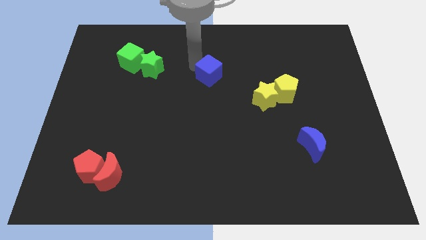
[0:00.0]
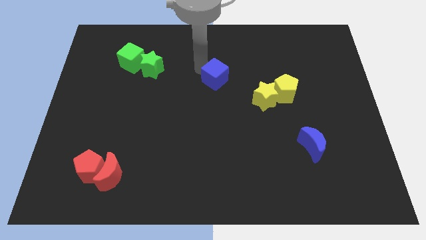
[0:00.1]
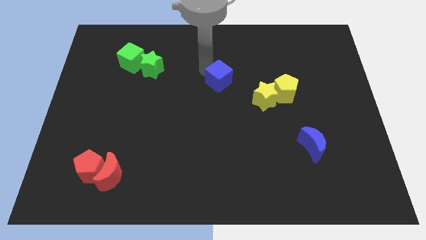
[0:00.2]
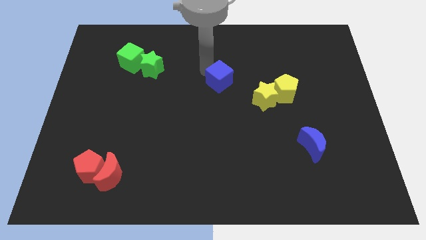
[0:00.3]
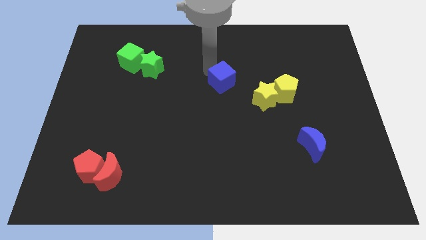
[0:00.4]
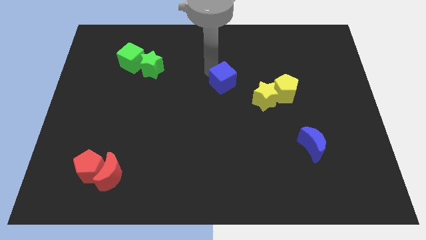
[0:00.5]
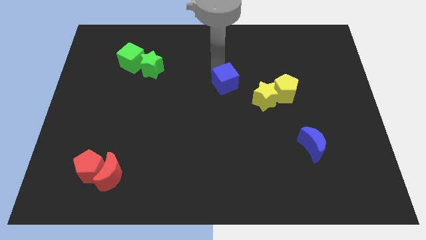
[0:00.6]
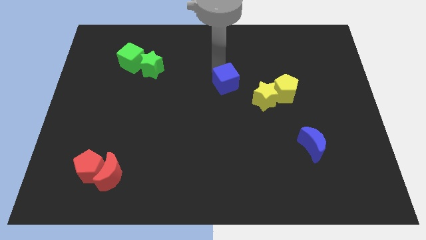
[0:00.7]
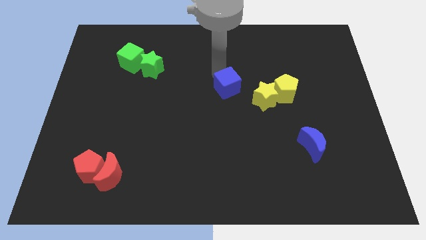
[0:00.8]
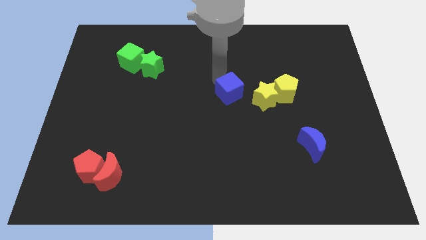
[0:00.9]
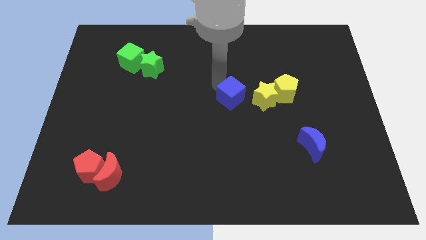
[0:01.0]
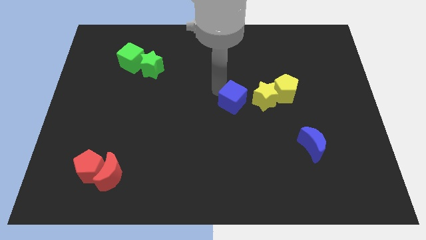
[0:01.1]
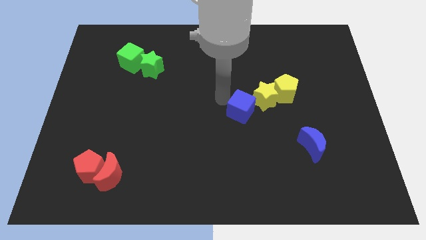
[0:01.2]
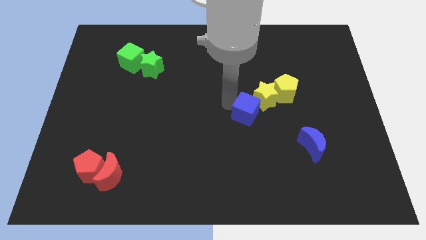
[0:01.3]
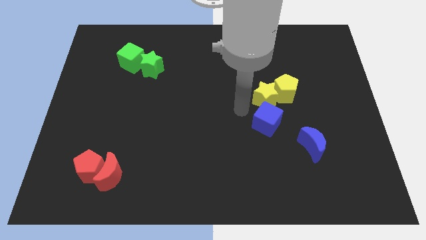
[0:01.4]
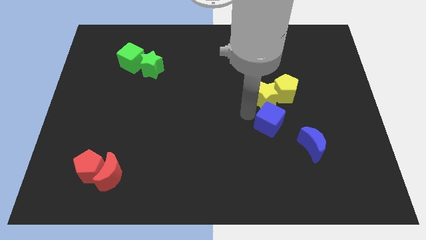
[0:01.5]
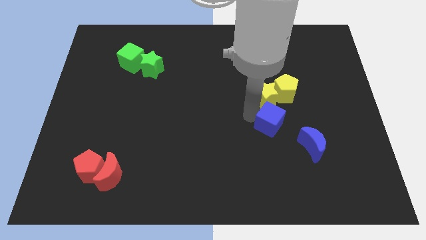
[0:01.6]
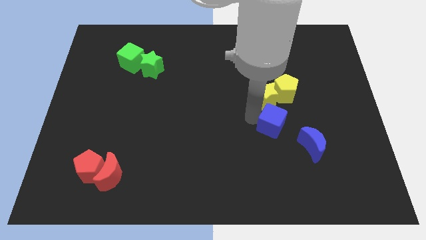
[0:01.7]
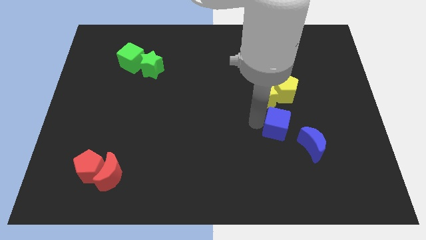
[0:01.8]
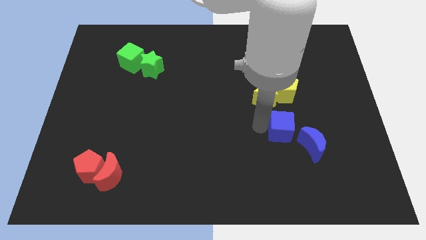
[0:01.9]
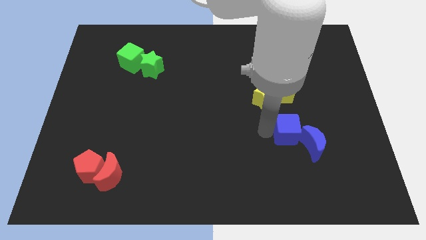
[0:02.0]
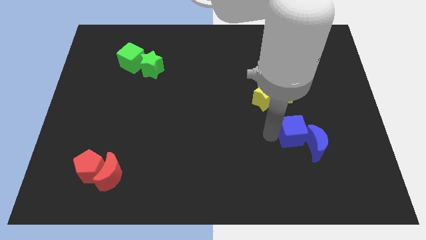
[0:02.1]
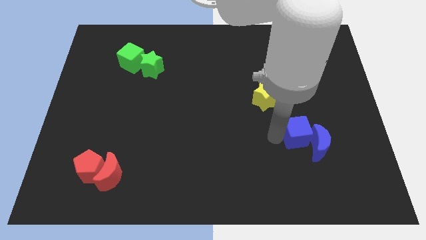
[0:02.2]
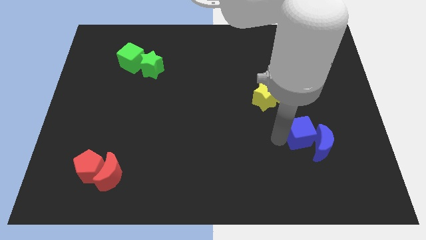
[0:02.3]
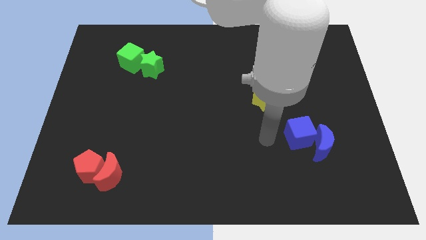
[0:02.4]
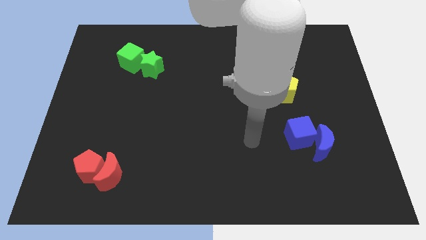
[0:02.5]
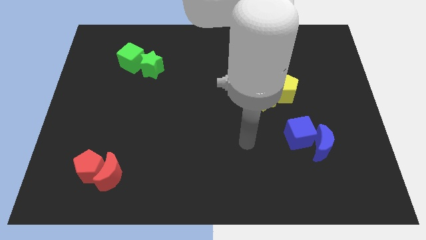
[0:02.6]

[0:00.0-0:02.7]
push the blue cube into the blue moon

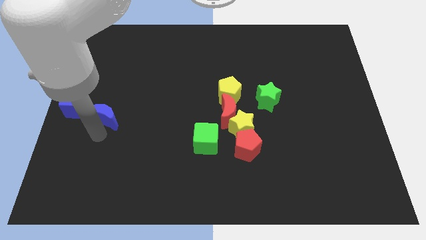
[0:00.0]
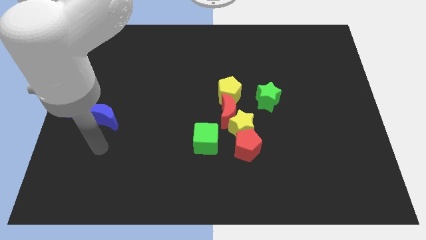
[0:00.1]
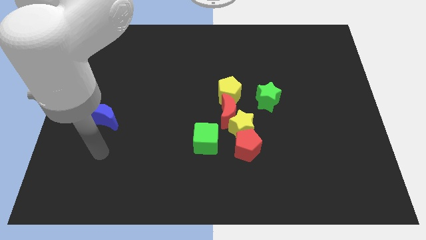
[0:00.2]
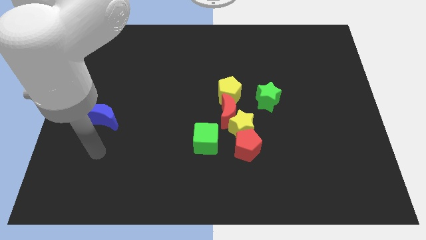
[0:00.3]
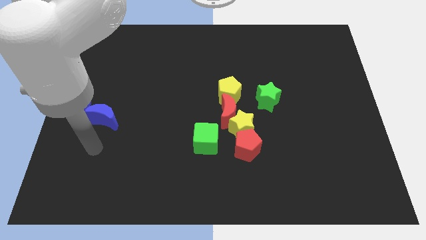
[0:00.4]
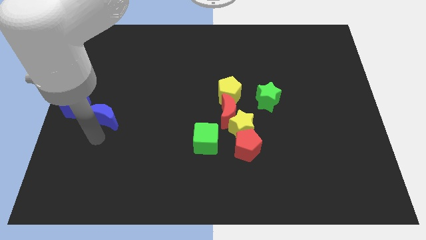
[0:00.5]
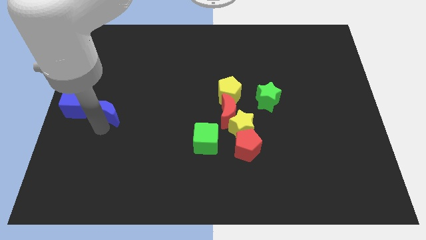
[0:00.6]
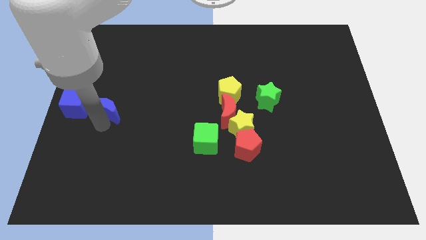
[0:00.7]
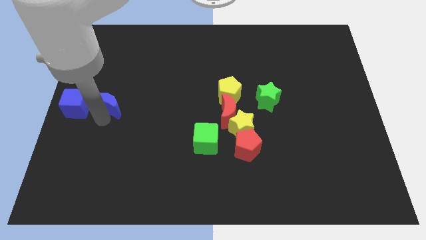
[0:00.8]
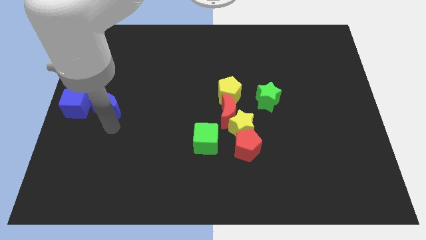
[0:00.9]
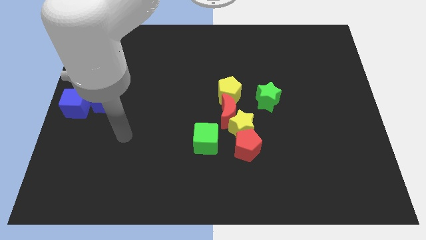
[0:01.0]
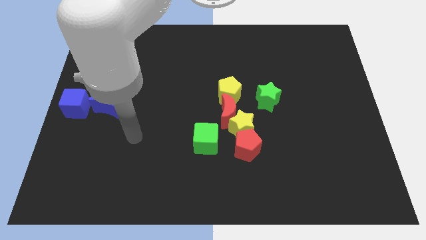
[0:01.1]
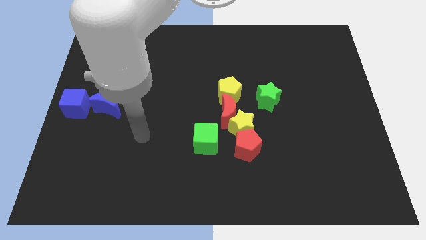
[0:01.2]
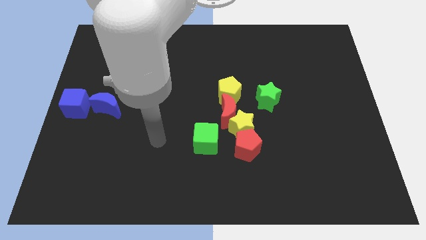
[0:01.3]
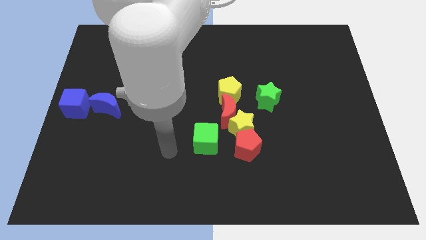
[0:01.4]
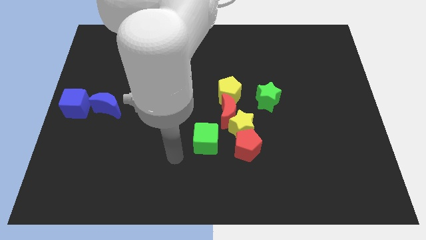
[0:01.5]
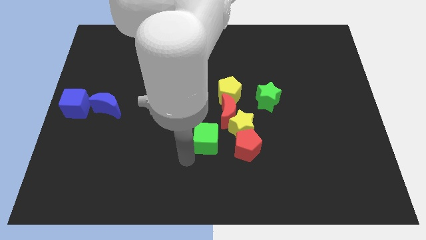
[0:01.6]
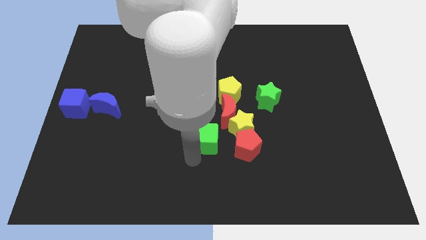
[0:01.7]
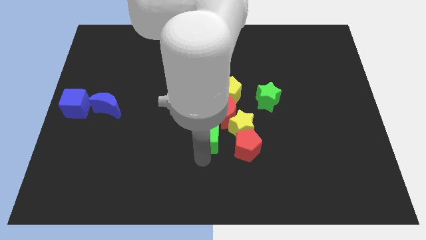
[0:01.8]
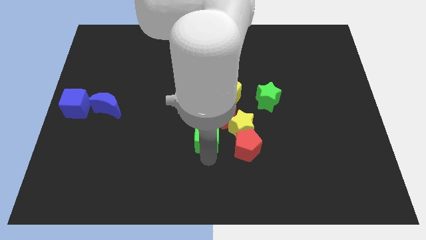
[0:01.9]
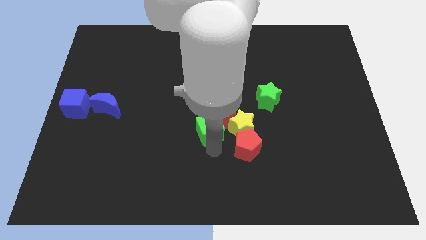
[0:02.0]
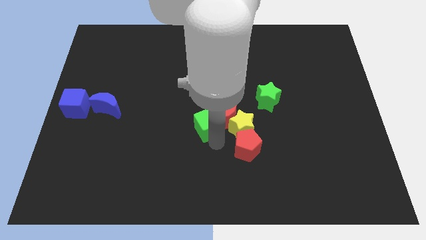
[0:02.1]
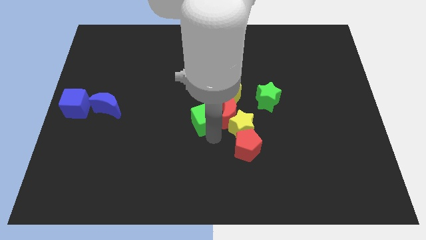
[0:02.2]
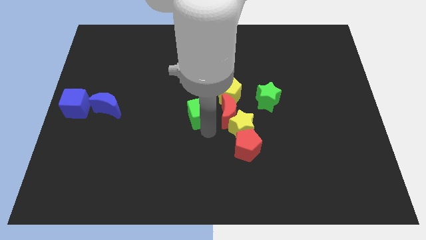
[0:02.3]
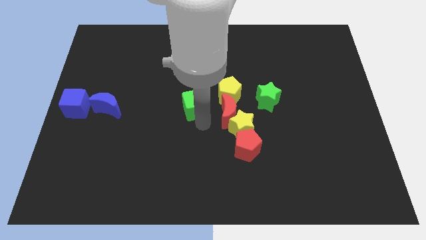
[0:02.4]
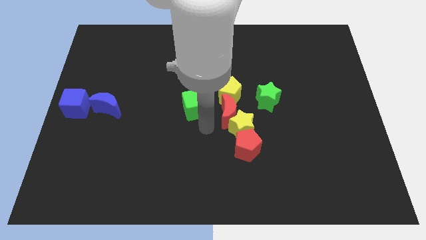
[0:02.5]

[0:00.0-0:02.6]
move the green cube up slightly

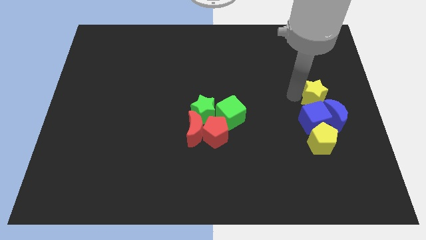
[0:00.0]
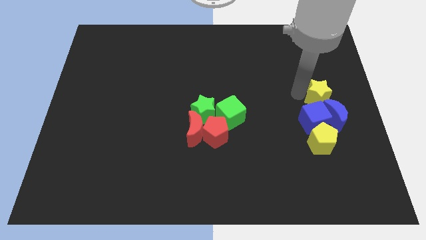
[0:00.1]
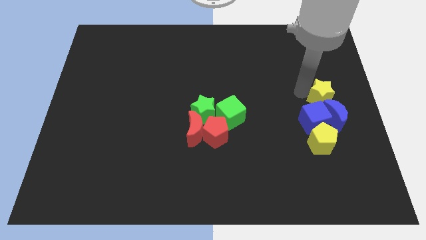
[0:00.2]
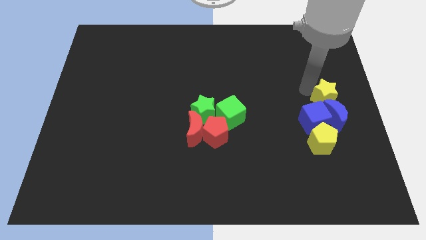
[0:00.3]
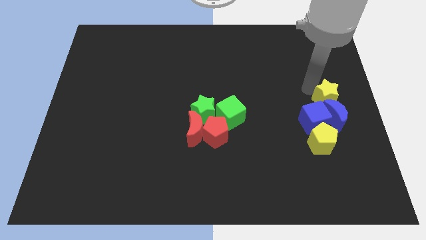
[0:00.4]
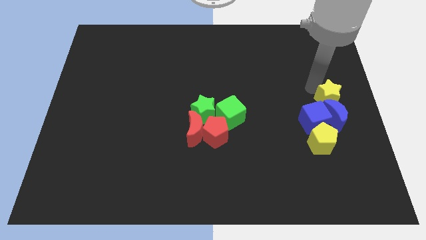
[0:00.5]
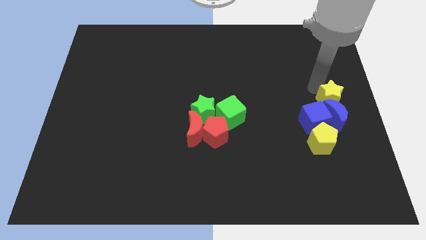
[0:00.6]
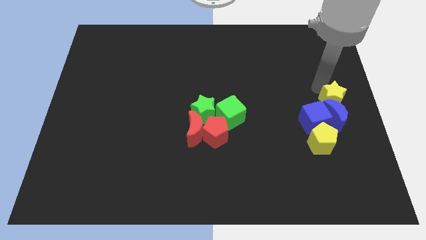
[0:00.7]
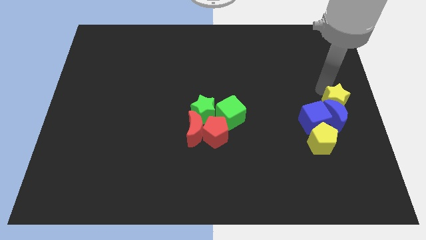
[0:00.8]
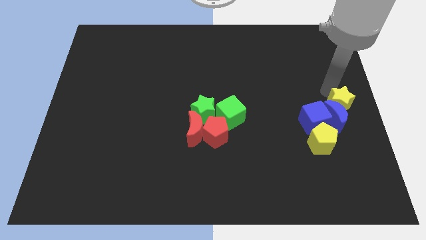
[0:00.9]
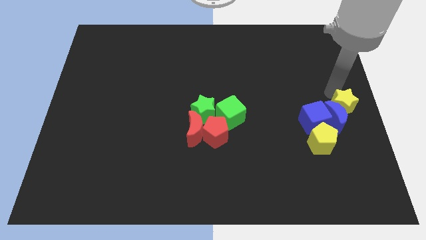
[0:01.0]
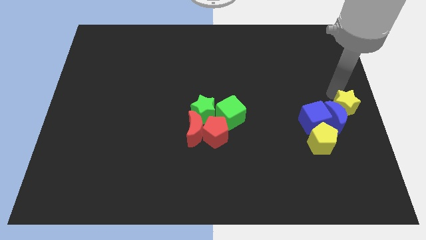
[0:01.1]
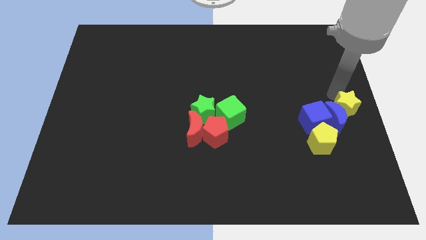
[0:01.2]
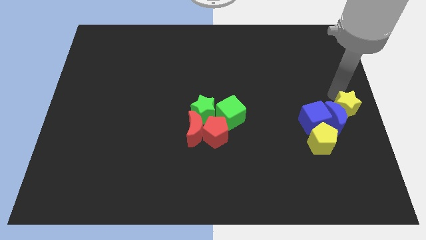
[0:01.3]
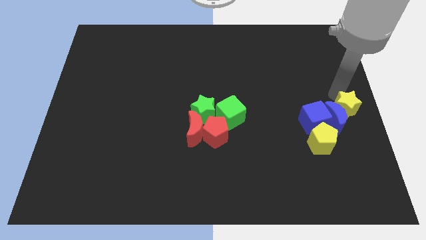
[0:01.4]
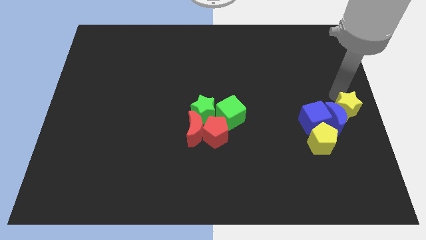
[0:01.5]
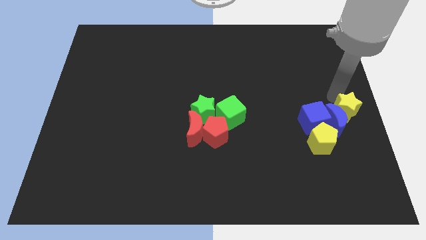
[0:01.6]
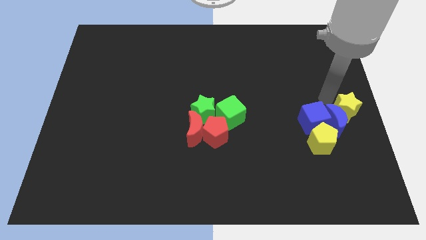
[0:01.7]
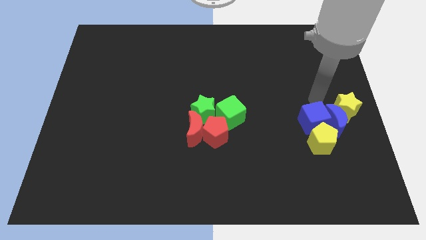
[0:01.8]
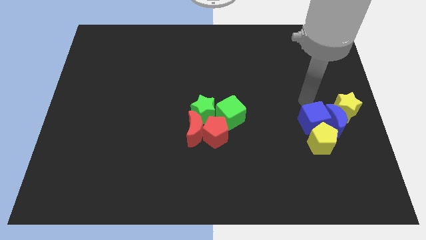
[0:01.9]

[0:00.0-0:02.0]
move the yellow star to the right of the blue crescent

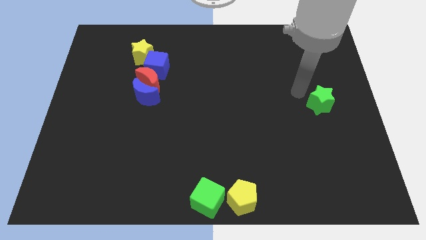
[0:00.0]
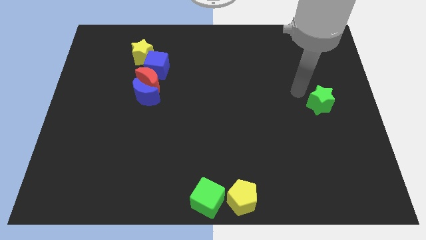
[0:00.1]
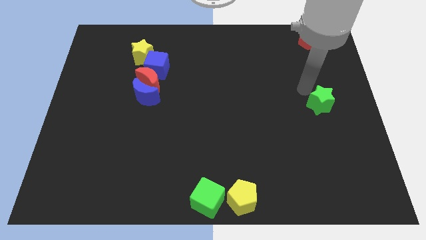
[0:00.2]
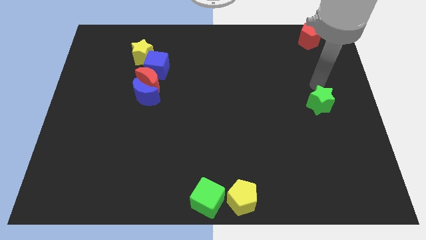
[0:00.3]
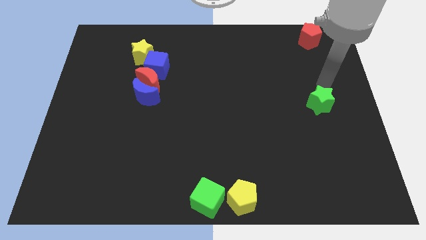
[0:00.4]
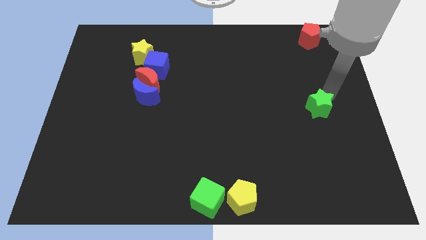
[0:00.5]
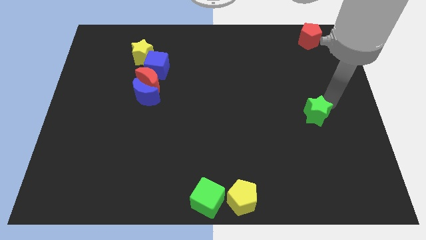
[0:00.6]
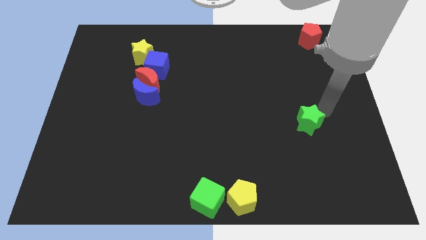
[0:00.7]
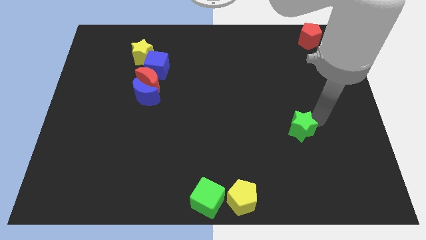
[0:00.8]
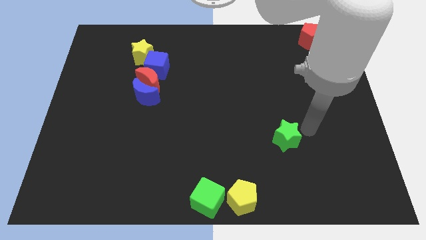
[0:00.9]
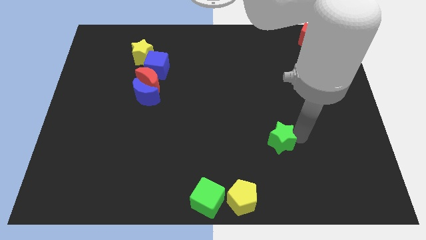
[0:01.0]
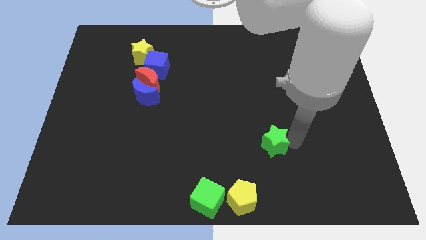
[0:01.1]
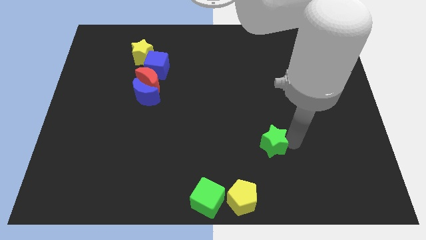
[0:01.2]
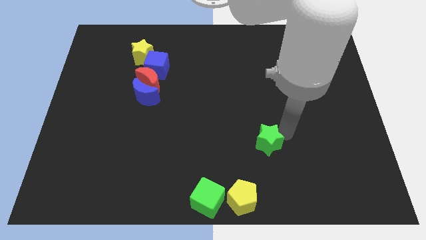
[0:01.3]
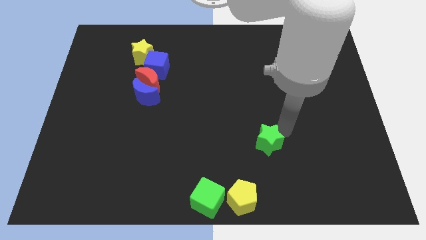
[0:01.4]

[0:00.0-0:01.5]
push green star towards the bottom of the board

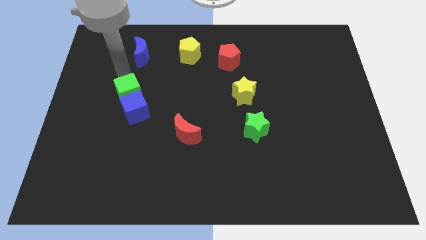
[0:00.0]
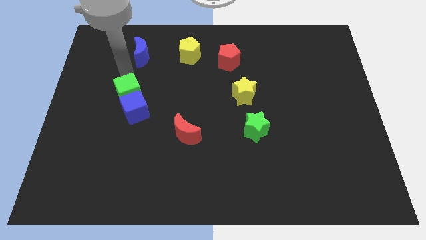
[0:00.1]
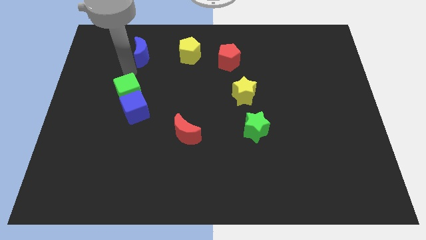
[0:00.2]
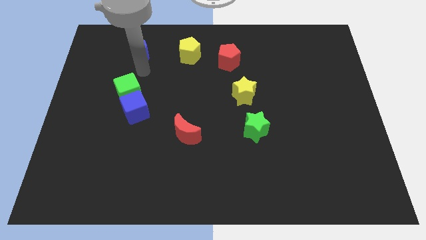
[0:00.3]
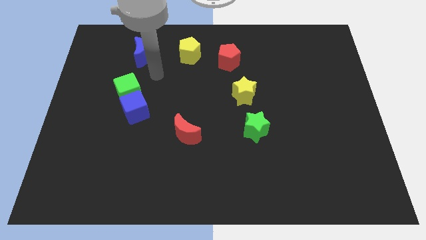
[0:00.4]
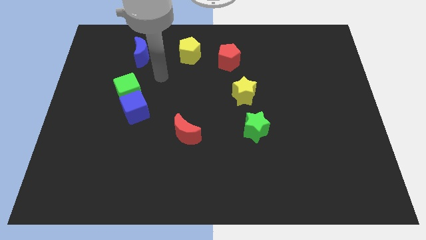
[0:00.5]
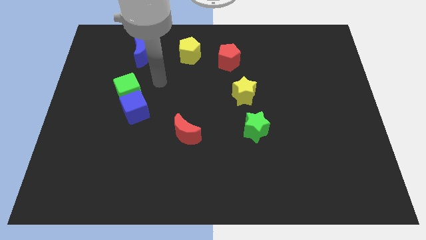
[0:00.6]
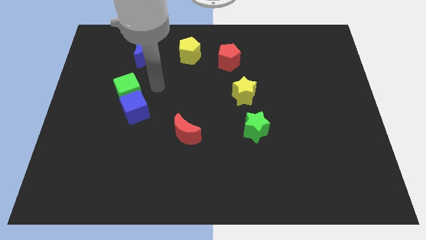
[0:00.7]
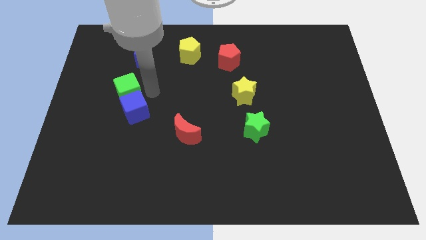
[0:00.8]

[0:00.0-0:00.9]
move your arm towards the right of the green cube
